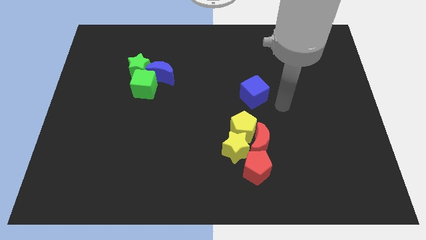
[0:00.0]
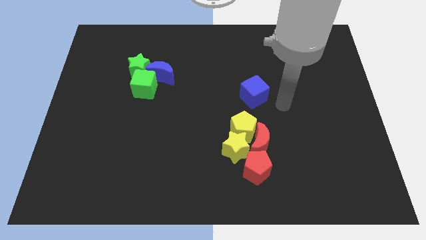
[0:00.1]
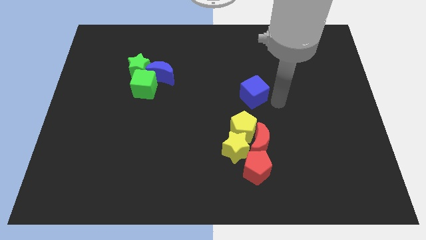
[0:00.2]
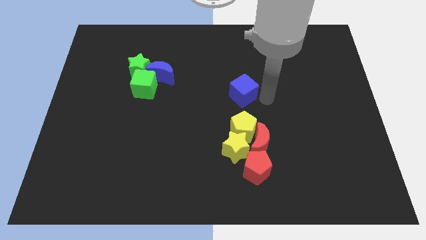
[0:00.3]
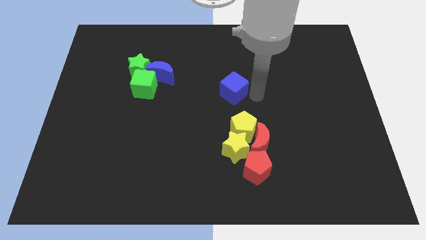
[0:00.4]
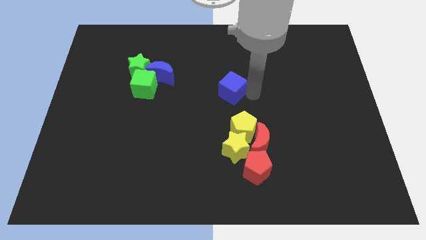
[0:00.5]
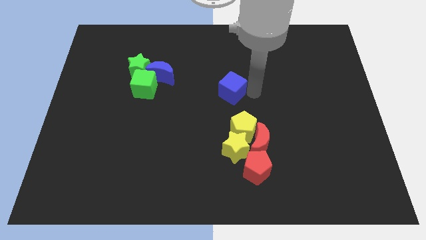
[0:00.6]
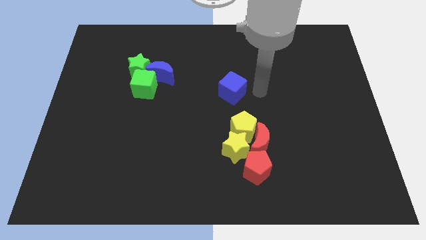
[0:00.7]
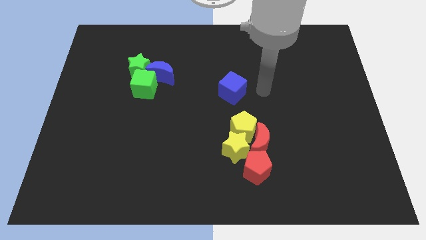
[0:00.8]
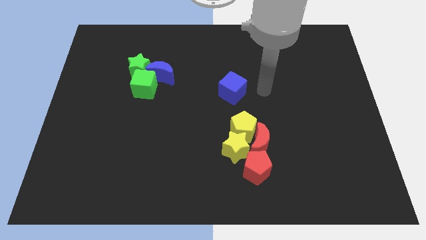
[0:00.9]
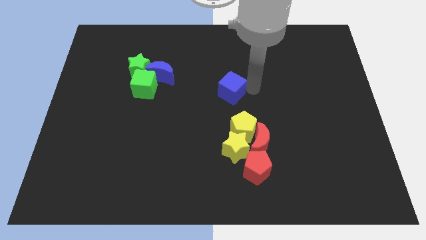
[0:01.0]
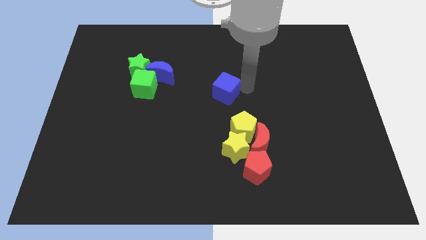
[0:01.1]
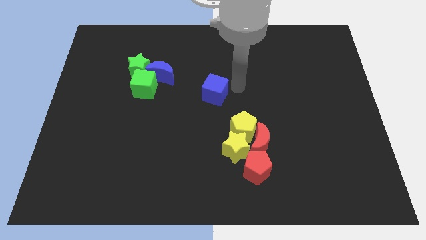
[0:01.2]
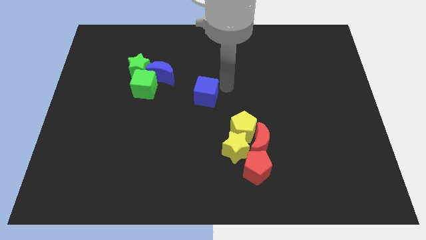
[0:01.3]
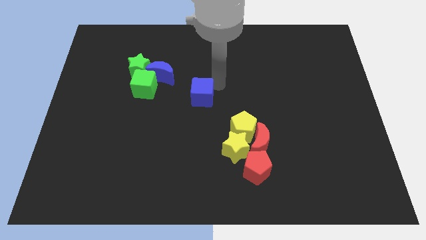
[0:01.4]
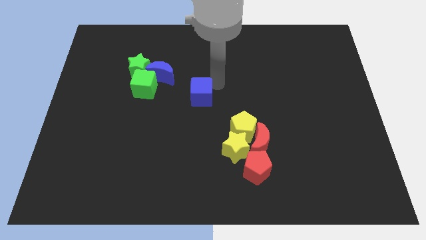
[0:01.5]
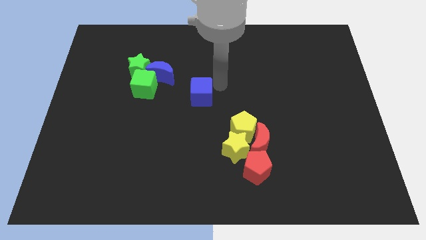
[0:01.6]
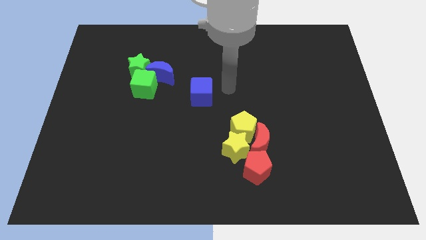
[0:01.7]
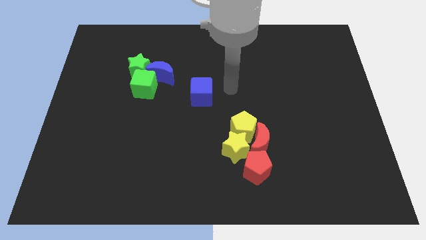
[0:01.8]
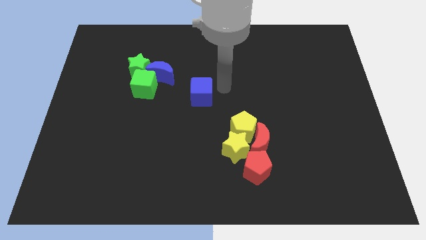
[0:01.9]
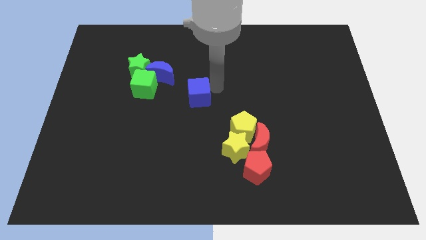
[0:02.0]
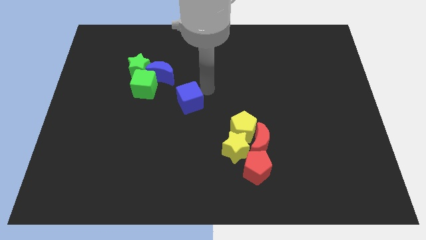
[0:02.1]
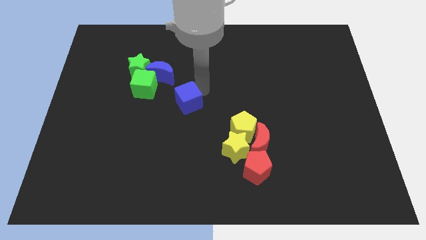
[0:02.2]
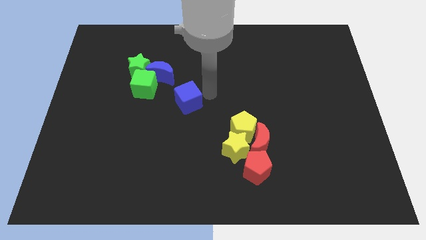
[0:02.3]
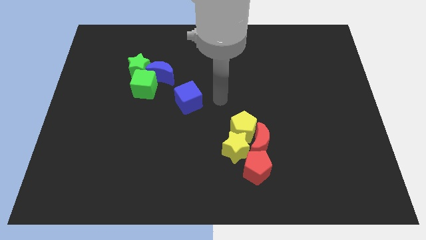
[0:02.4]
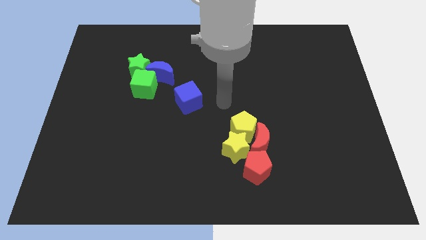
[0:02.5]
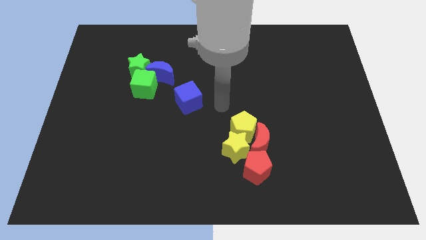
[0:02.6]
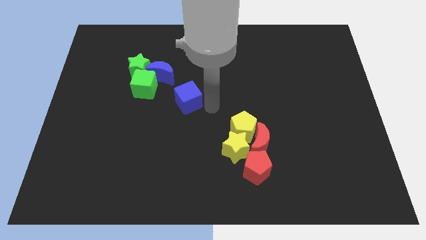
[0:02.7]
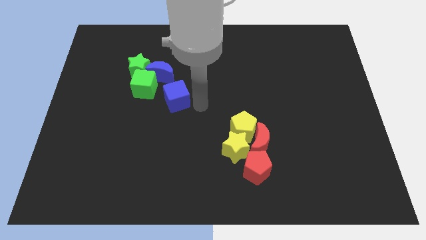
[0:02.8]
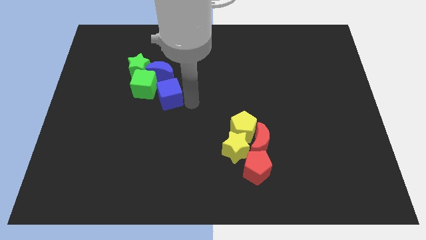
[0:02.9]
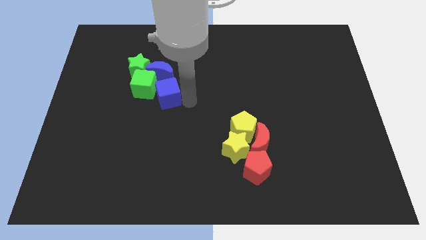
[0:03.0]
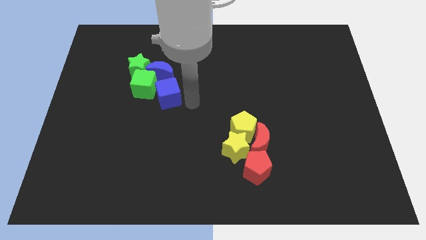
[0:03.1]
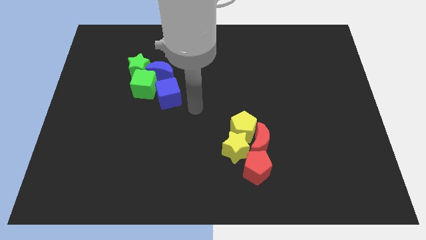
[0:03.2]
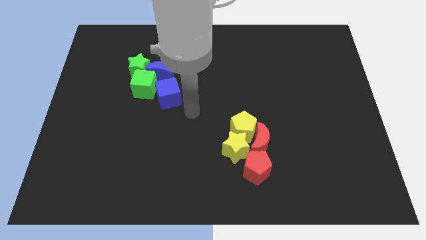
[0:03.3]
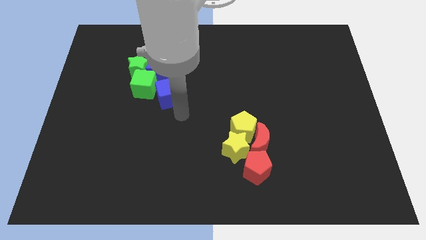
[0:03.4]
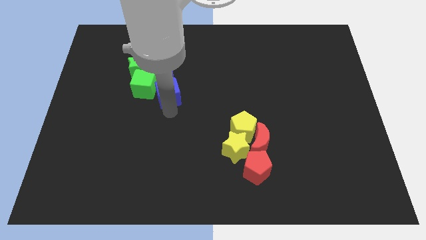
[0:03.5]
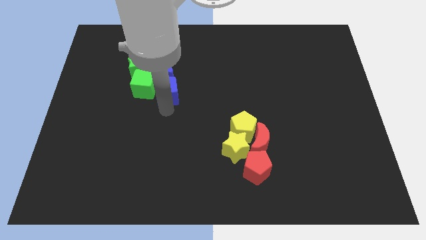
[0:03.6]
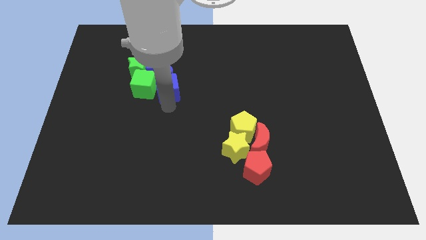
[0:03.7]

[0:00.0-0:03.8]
place the blue cube right to the green cube

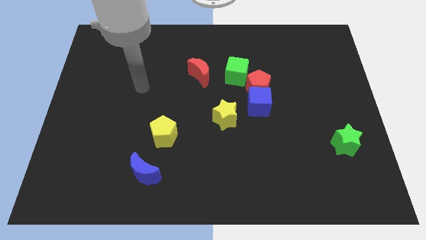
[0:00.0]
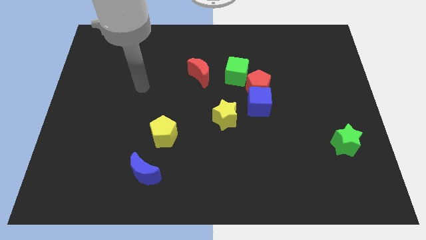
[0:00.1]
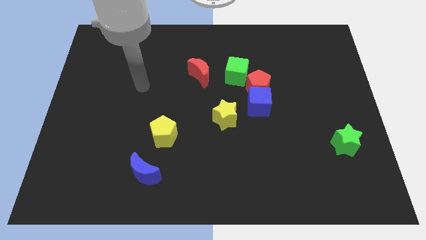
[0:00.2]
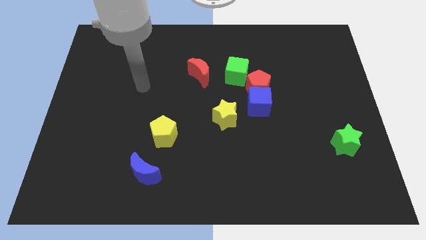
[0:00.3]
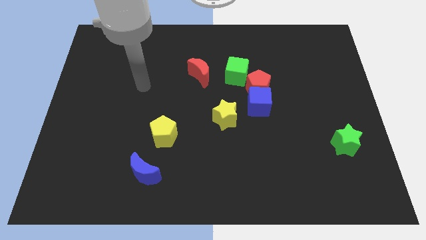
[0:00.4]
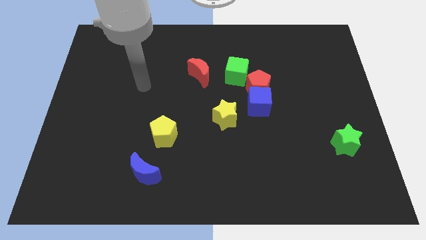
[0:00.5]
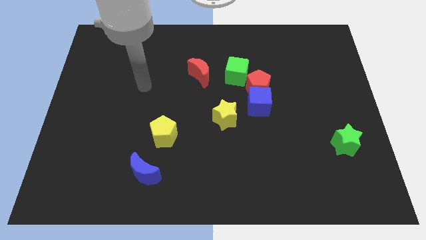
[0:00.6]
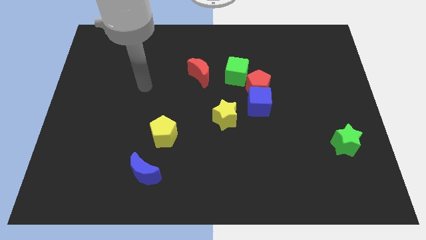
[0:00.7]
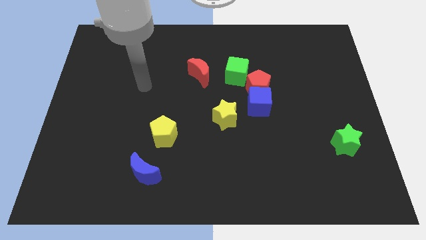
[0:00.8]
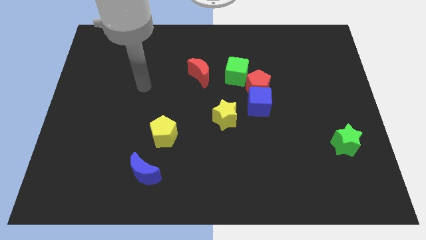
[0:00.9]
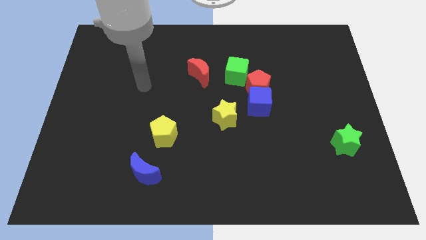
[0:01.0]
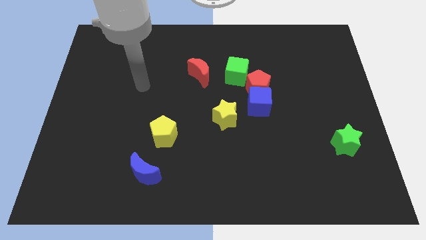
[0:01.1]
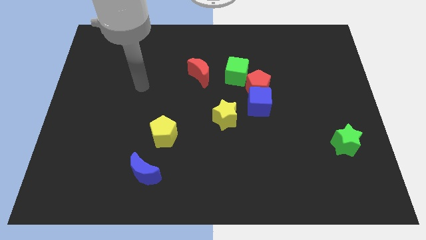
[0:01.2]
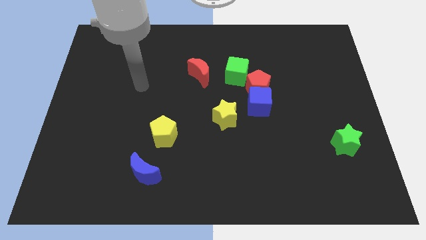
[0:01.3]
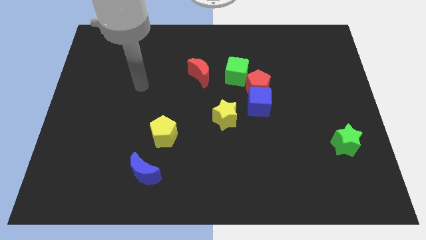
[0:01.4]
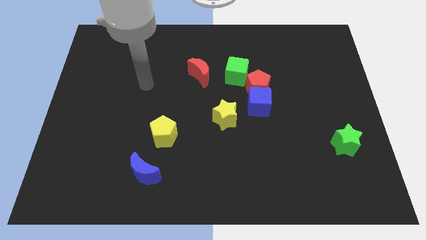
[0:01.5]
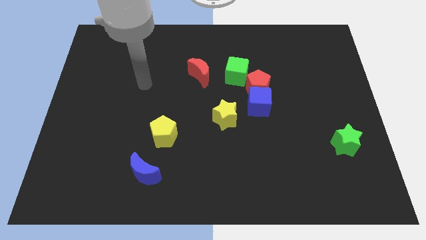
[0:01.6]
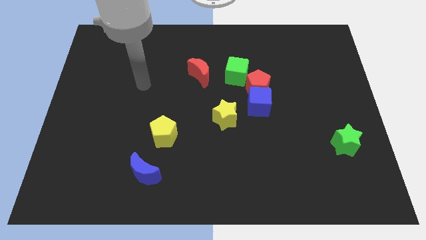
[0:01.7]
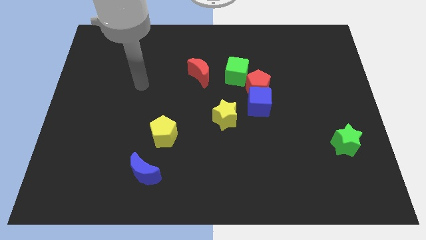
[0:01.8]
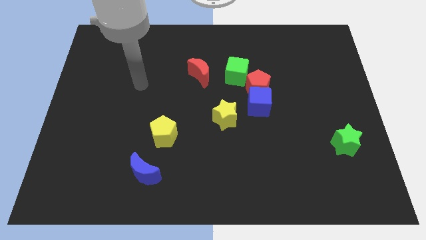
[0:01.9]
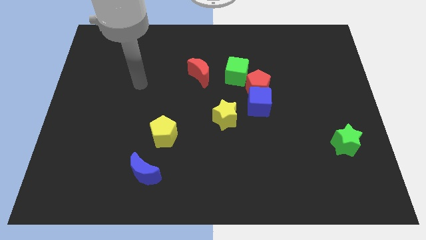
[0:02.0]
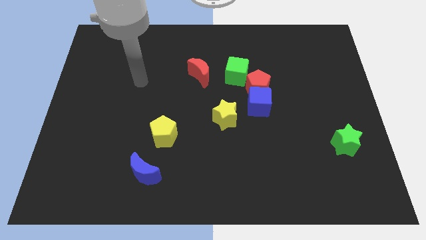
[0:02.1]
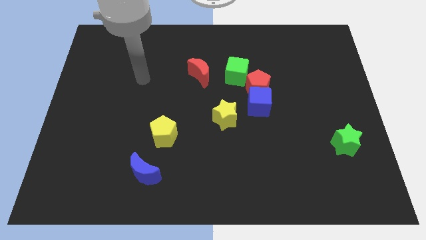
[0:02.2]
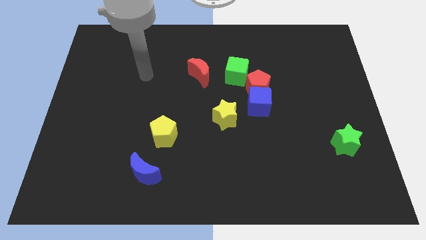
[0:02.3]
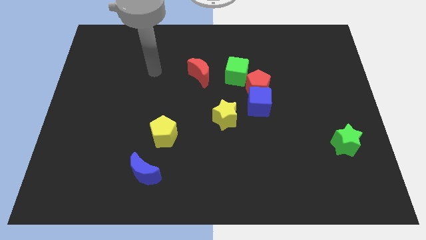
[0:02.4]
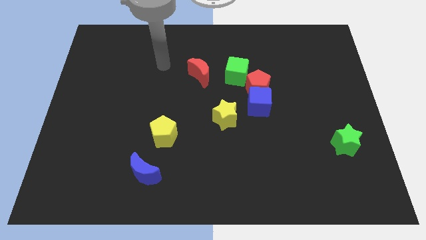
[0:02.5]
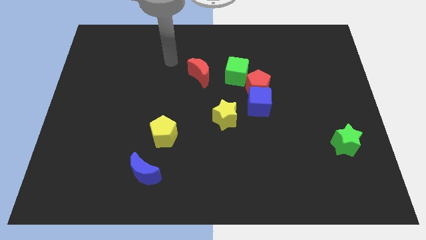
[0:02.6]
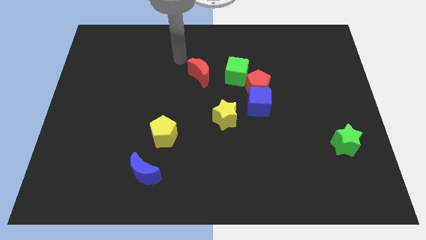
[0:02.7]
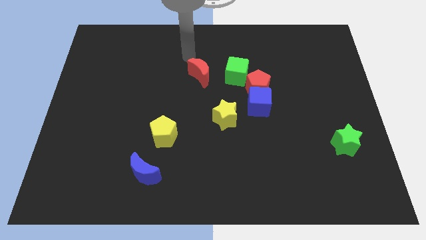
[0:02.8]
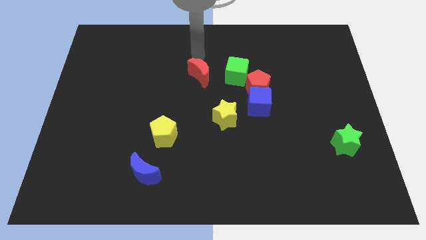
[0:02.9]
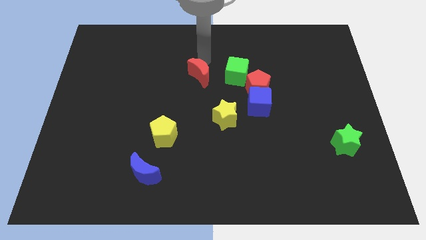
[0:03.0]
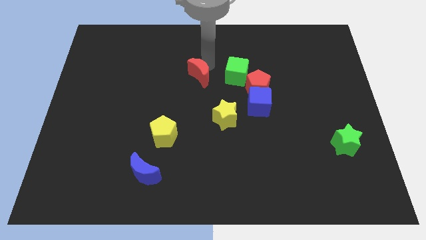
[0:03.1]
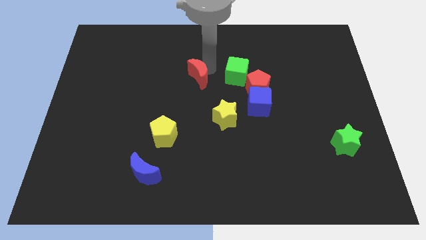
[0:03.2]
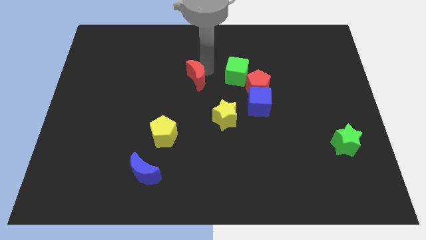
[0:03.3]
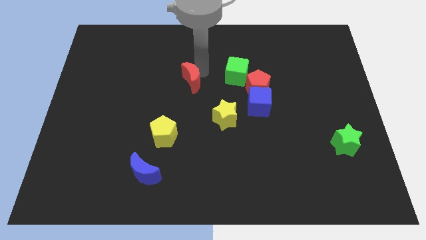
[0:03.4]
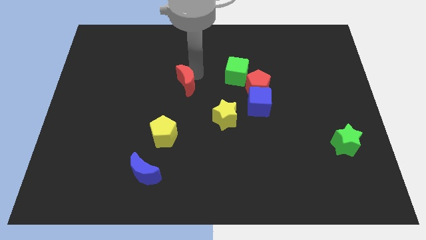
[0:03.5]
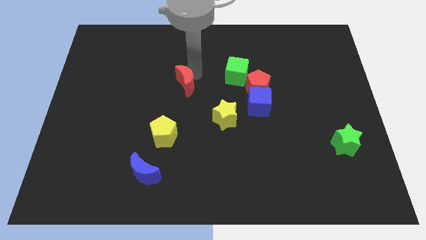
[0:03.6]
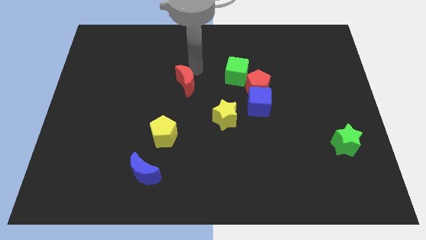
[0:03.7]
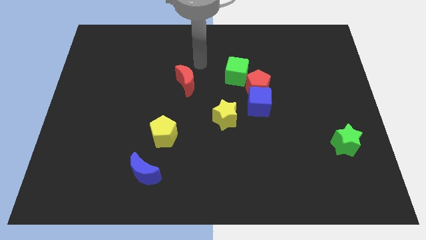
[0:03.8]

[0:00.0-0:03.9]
place the red moon left diagonal to the yellow star

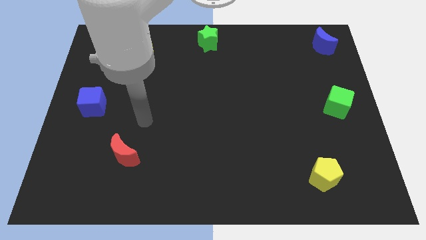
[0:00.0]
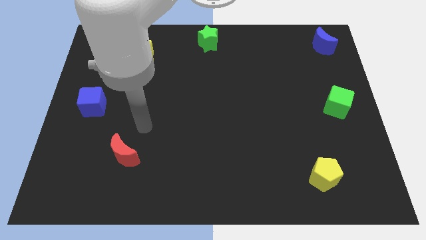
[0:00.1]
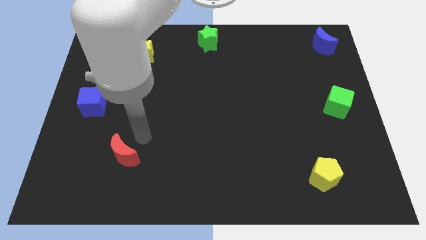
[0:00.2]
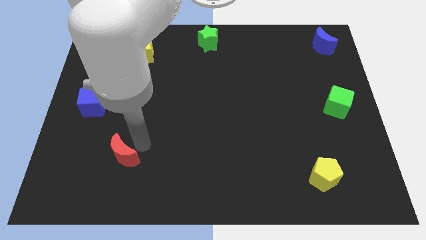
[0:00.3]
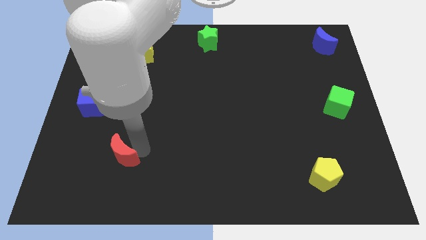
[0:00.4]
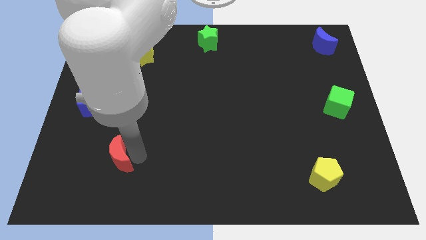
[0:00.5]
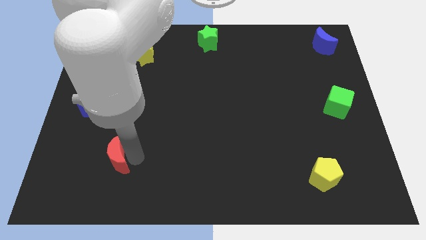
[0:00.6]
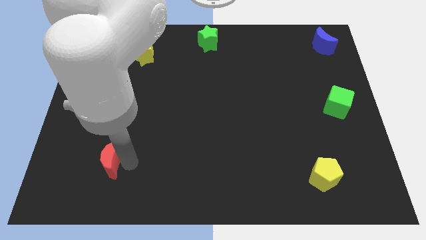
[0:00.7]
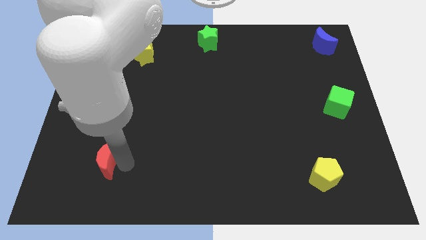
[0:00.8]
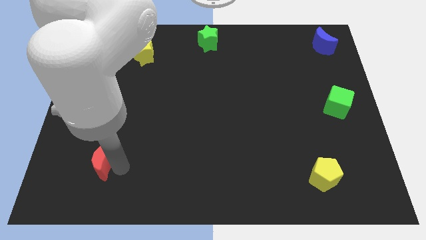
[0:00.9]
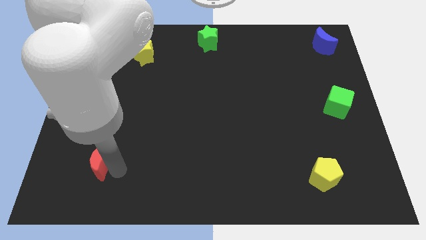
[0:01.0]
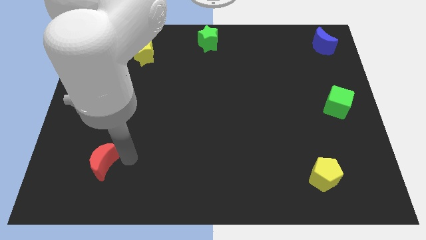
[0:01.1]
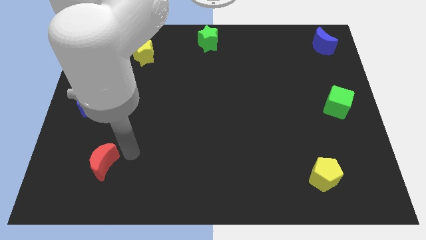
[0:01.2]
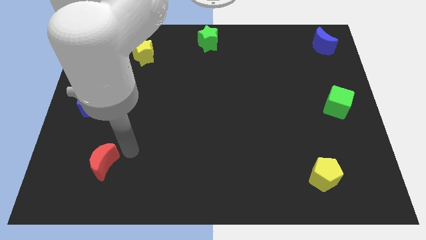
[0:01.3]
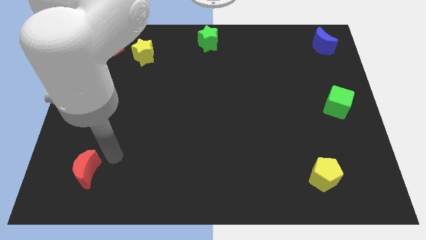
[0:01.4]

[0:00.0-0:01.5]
place the red crescent to the bottom of the blue cube
